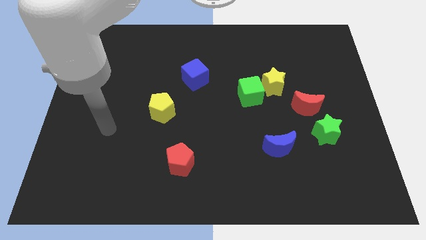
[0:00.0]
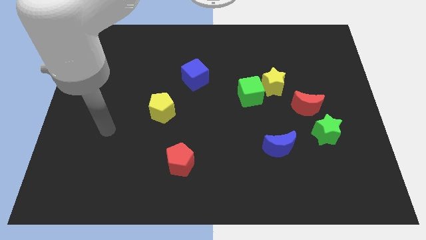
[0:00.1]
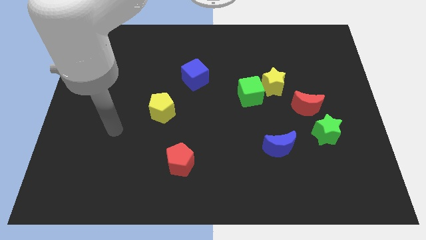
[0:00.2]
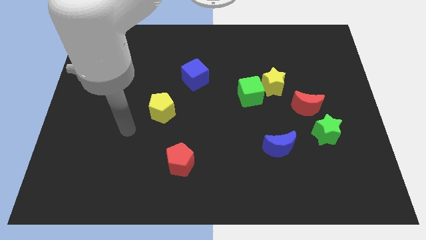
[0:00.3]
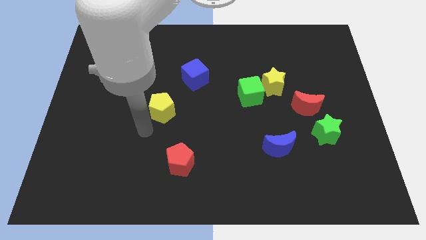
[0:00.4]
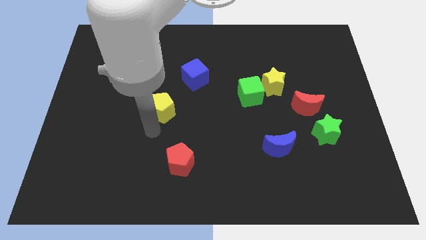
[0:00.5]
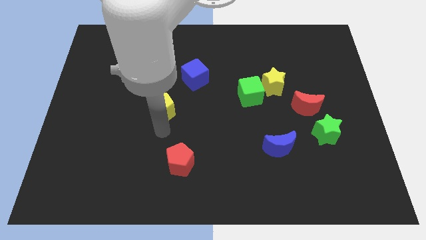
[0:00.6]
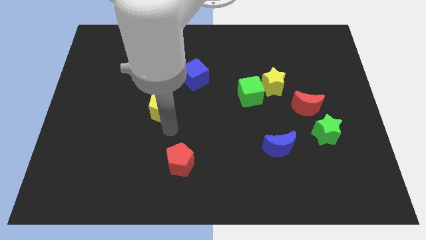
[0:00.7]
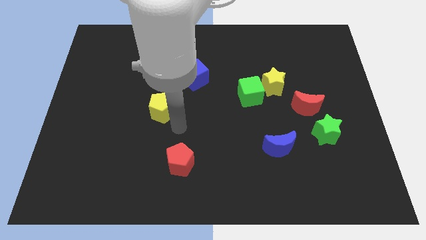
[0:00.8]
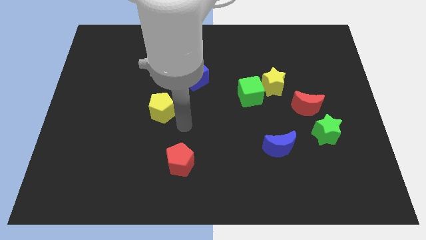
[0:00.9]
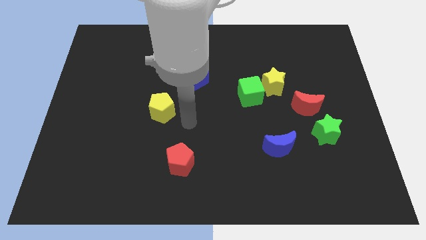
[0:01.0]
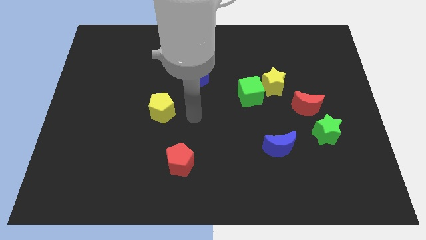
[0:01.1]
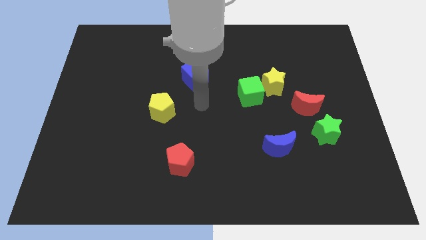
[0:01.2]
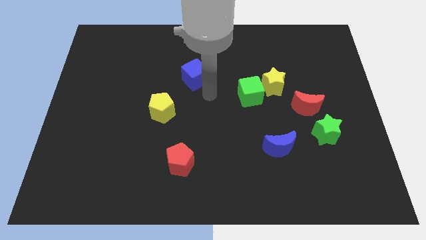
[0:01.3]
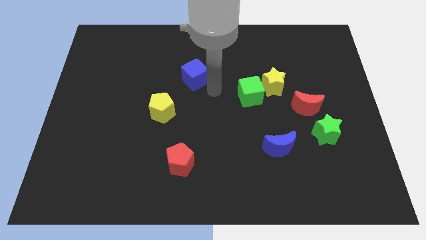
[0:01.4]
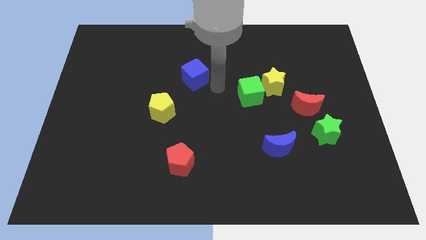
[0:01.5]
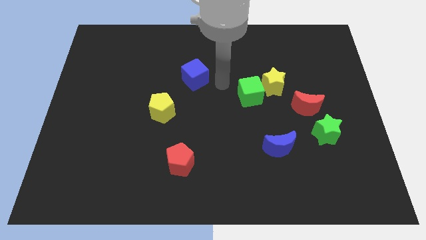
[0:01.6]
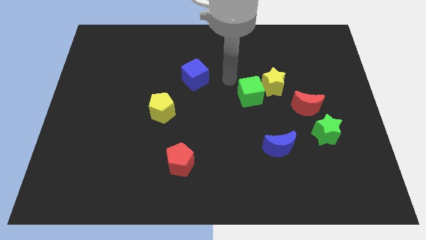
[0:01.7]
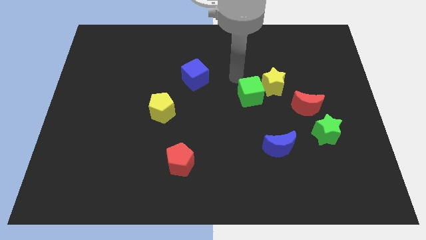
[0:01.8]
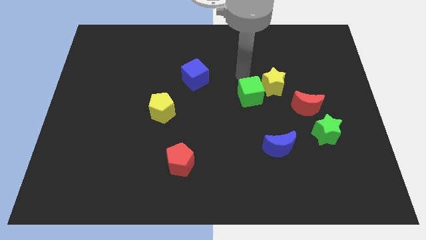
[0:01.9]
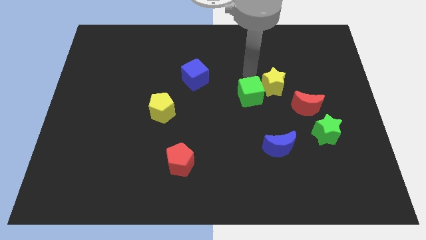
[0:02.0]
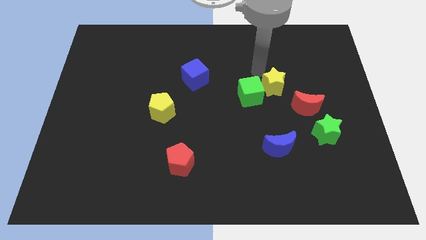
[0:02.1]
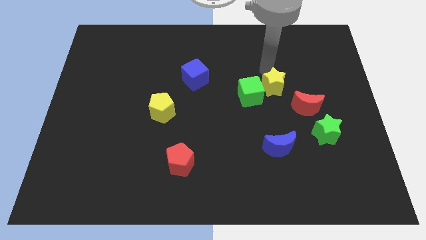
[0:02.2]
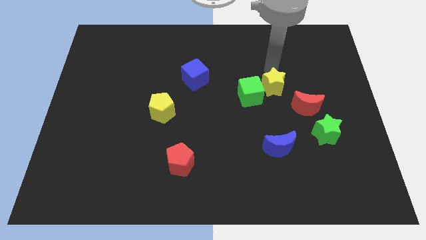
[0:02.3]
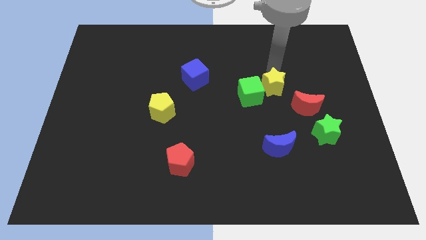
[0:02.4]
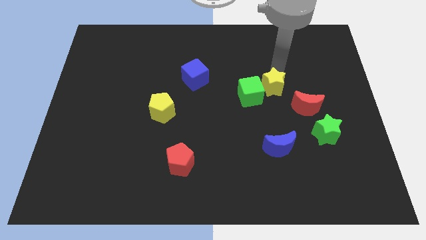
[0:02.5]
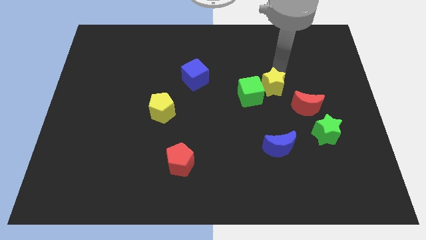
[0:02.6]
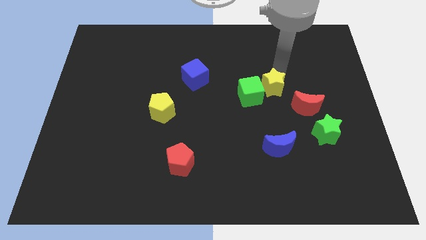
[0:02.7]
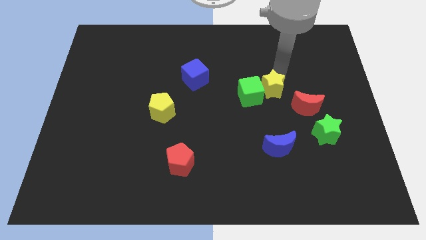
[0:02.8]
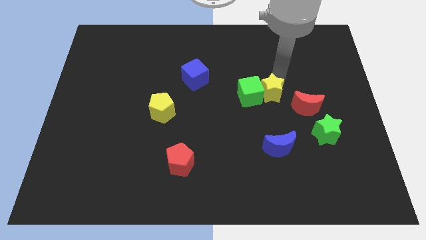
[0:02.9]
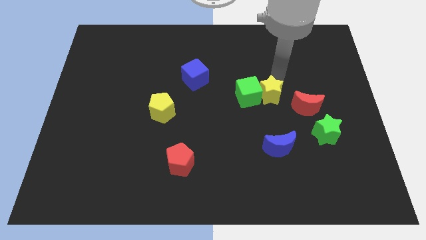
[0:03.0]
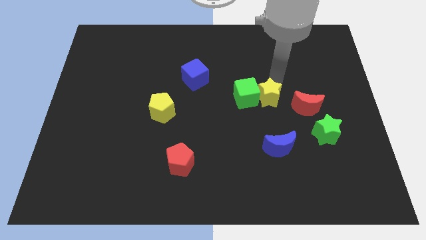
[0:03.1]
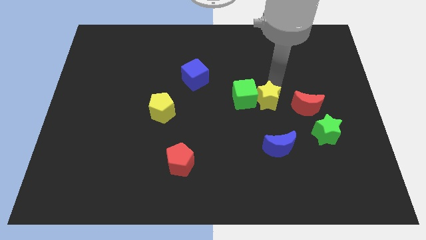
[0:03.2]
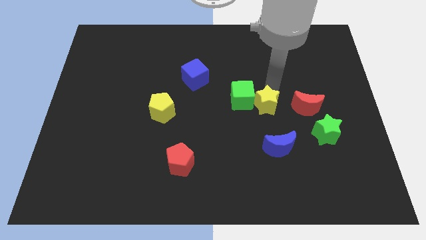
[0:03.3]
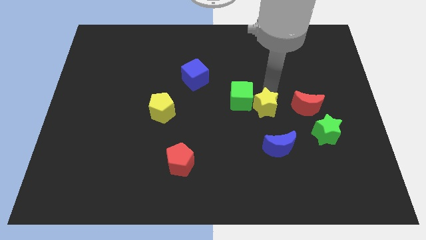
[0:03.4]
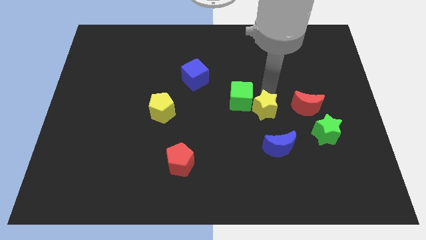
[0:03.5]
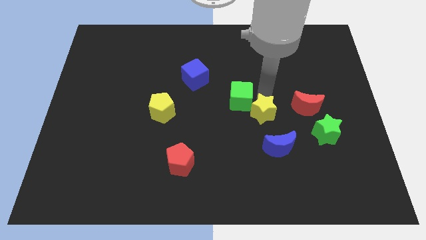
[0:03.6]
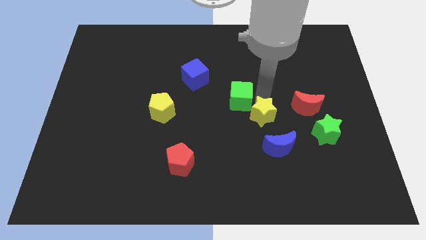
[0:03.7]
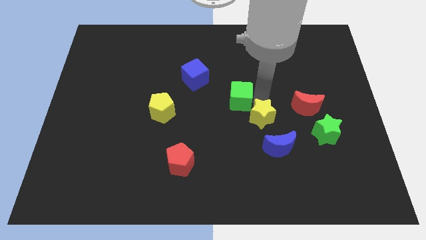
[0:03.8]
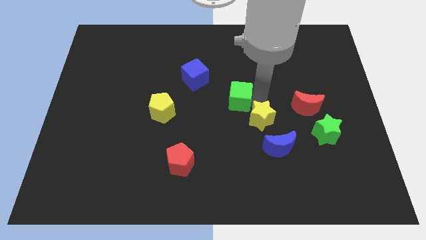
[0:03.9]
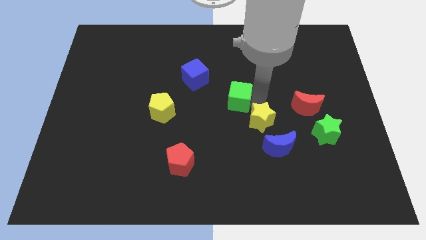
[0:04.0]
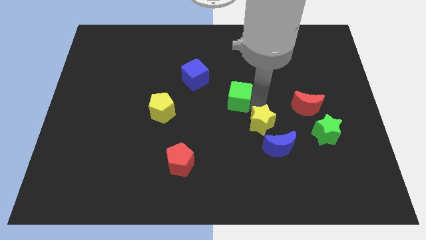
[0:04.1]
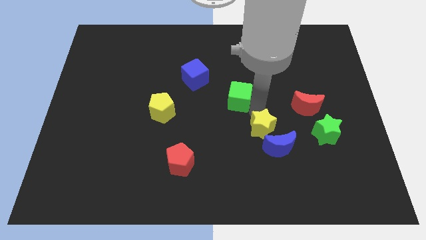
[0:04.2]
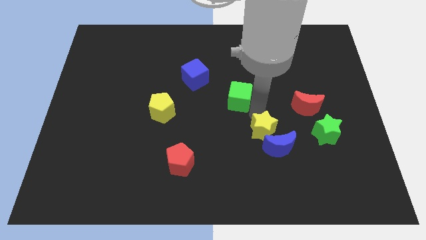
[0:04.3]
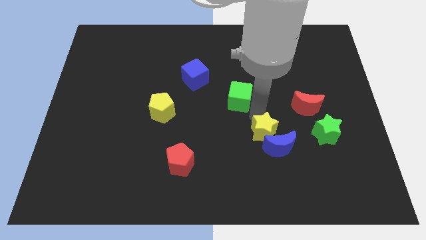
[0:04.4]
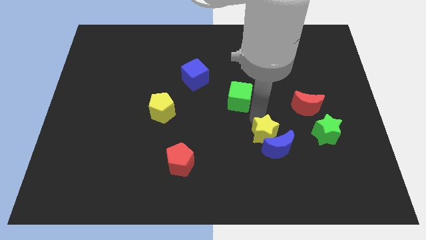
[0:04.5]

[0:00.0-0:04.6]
push the yellow star next to the blue moon

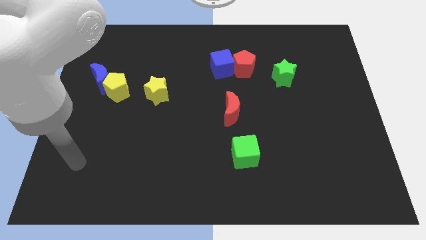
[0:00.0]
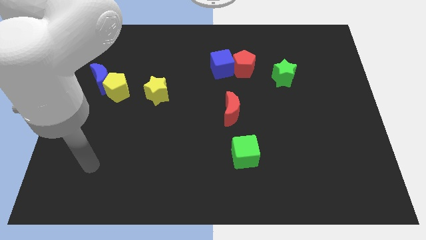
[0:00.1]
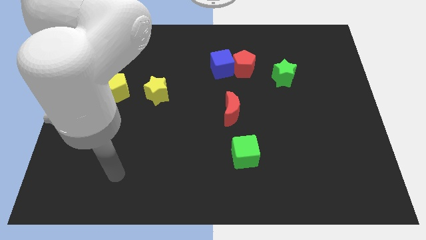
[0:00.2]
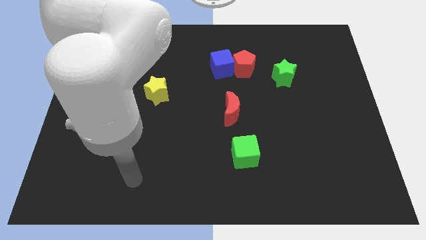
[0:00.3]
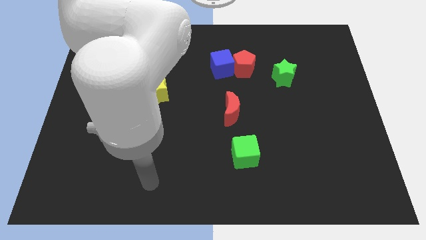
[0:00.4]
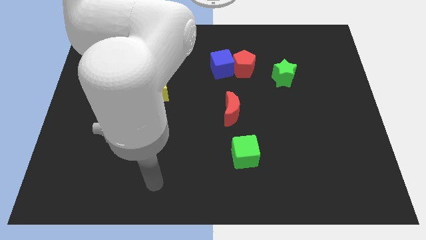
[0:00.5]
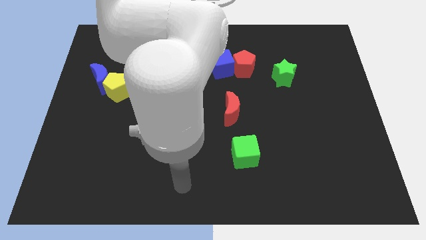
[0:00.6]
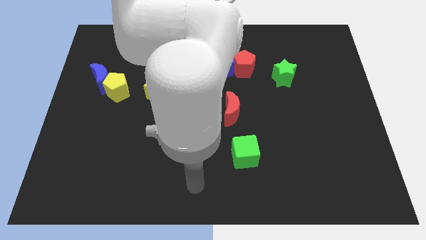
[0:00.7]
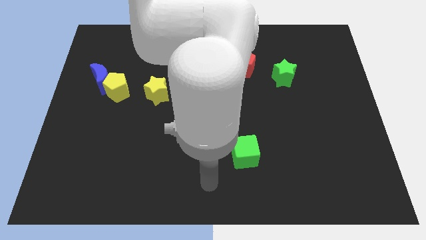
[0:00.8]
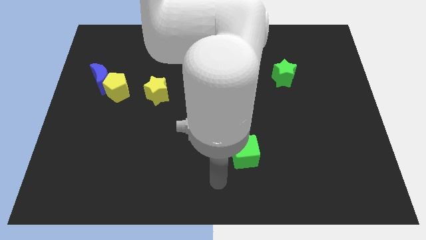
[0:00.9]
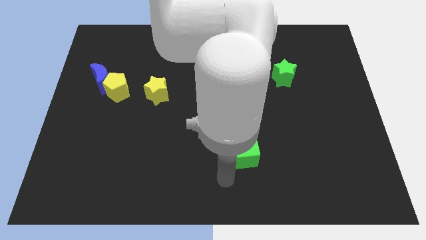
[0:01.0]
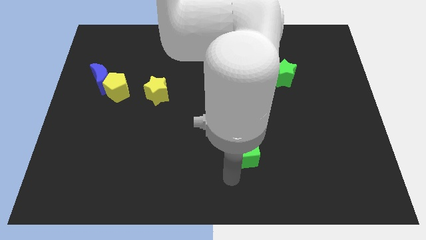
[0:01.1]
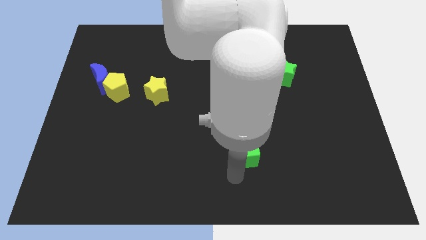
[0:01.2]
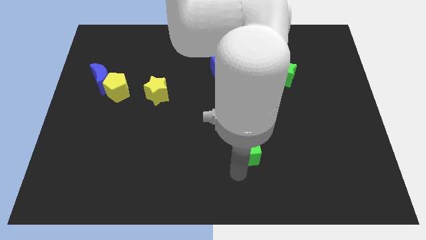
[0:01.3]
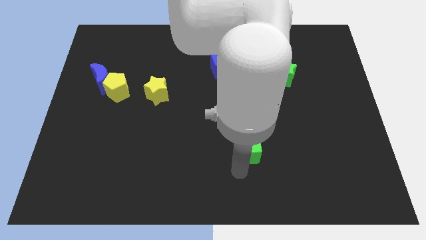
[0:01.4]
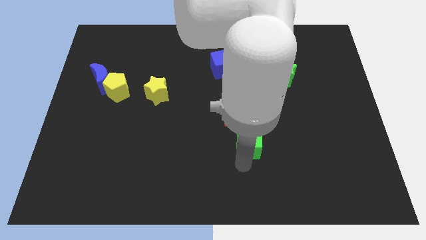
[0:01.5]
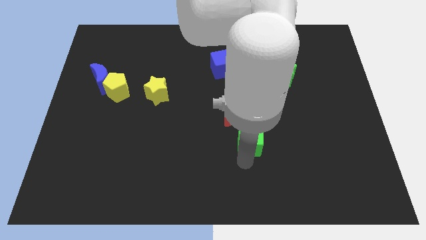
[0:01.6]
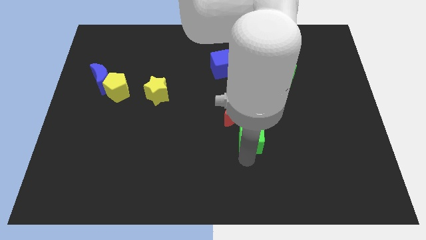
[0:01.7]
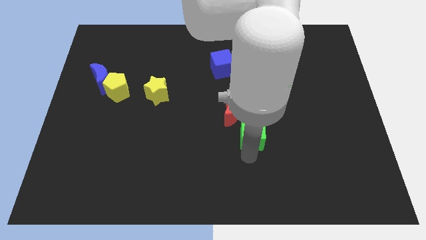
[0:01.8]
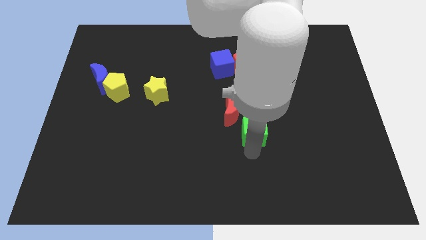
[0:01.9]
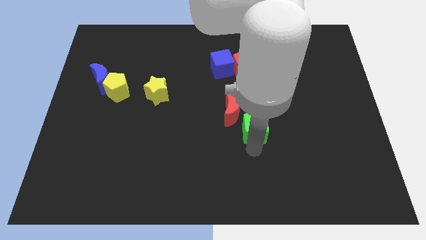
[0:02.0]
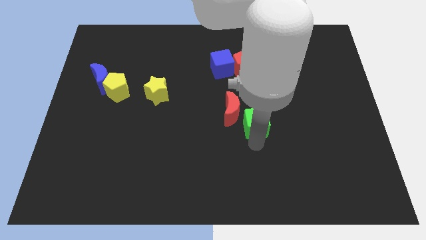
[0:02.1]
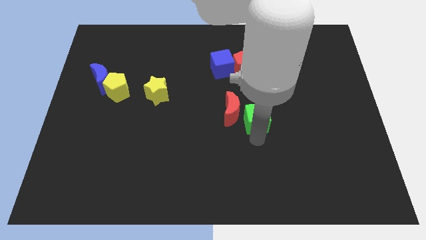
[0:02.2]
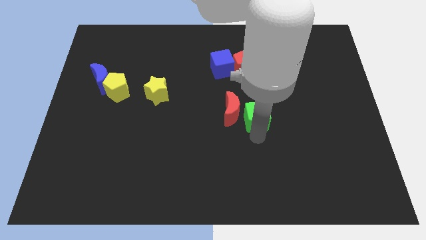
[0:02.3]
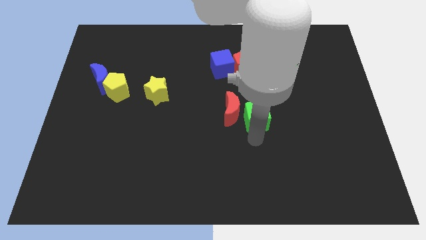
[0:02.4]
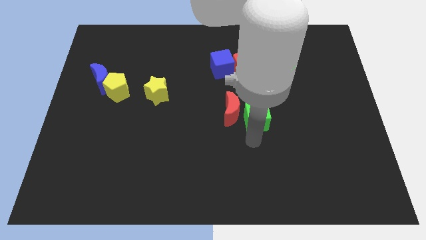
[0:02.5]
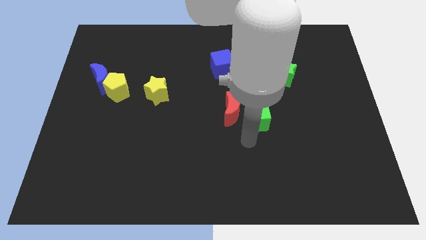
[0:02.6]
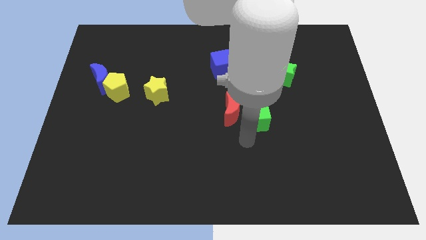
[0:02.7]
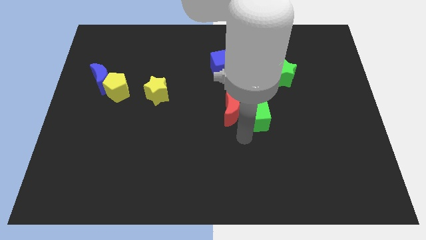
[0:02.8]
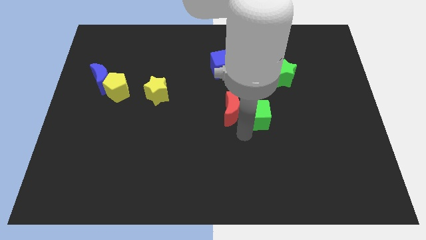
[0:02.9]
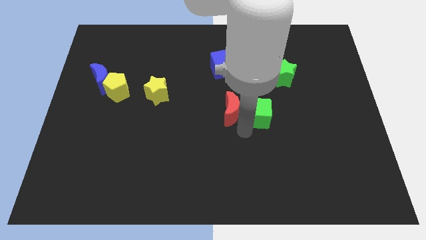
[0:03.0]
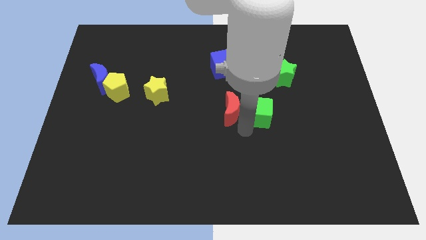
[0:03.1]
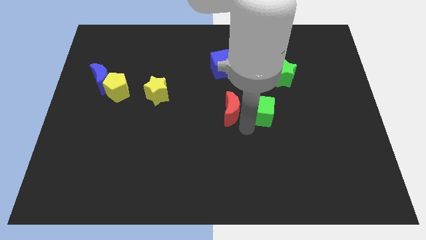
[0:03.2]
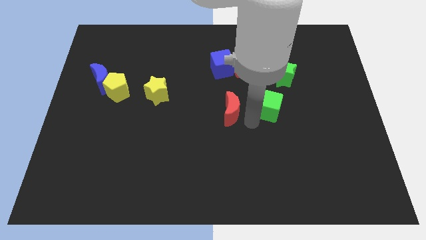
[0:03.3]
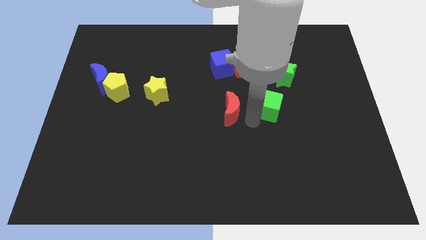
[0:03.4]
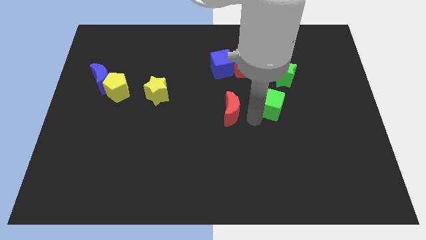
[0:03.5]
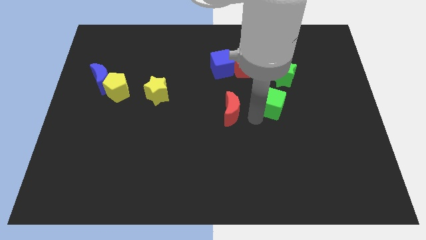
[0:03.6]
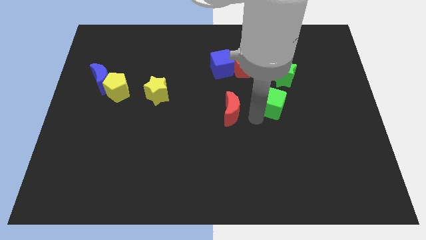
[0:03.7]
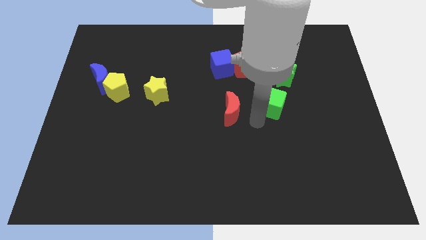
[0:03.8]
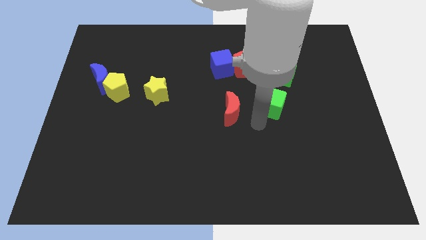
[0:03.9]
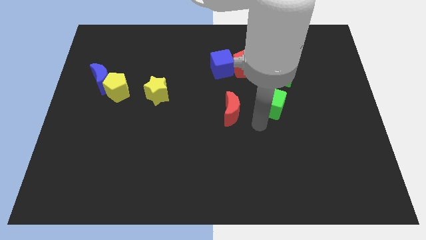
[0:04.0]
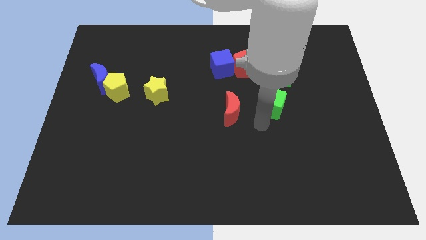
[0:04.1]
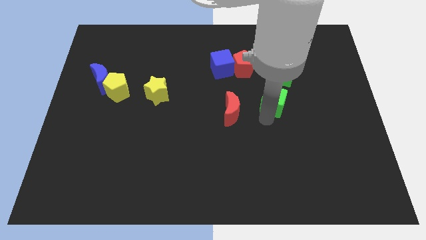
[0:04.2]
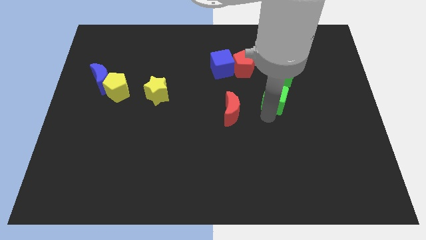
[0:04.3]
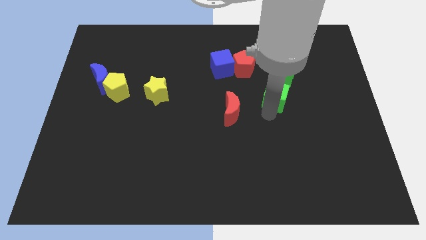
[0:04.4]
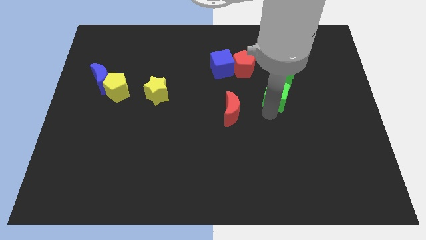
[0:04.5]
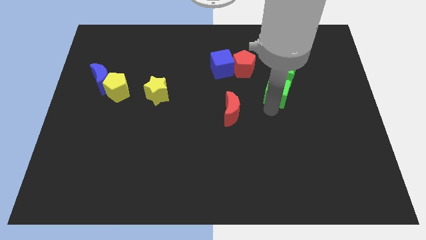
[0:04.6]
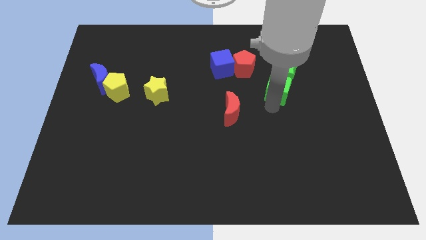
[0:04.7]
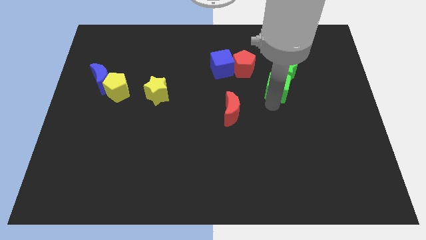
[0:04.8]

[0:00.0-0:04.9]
push the green cube towards the green star
